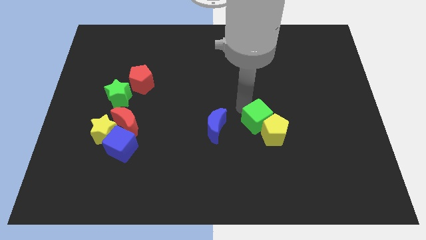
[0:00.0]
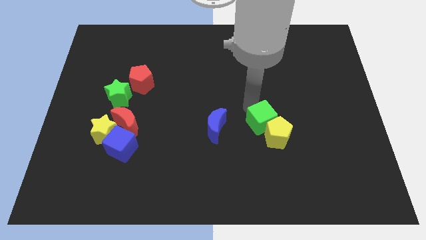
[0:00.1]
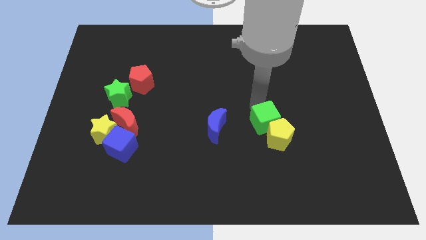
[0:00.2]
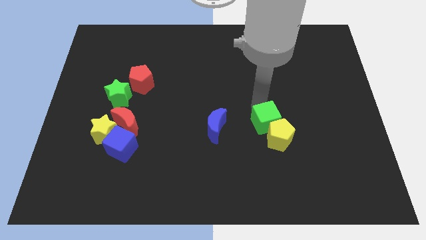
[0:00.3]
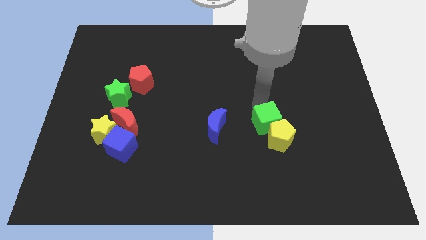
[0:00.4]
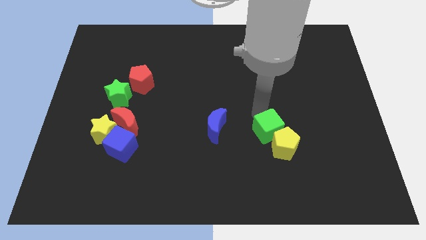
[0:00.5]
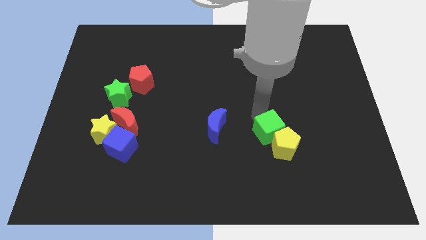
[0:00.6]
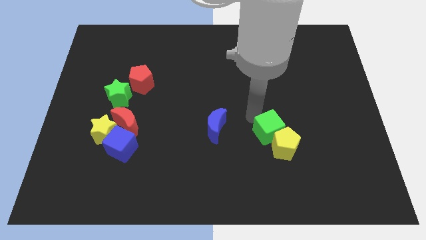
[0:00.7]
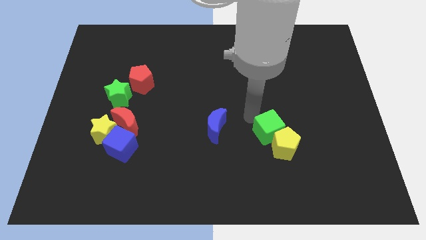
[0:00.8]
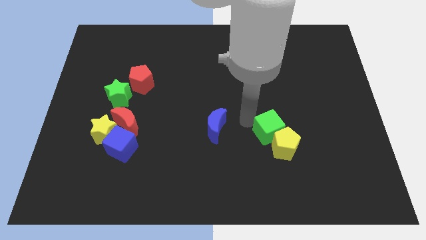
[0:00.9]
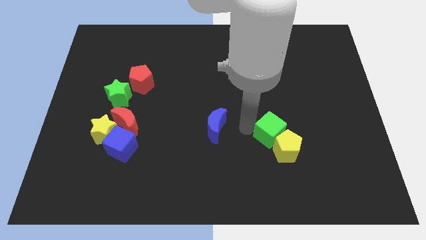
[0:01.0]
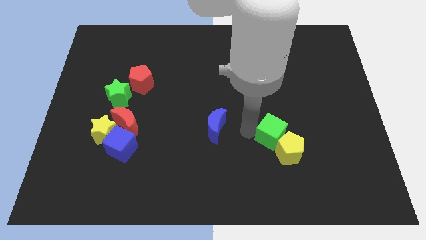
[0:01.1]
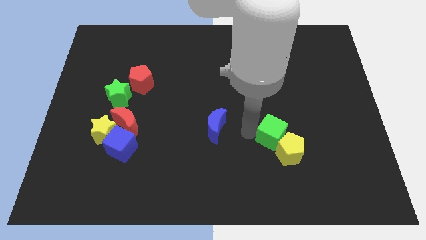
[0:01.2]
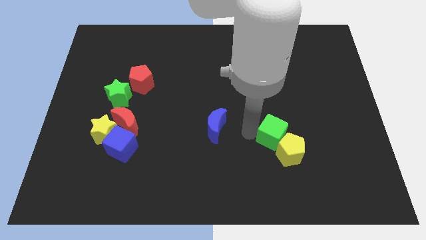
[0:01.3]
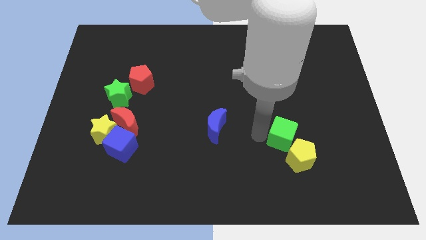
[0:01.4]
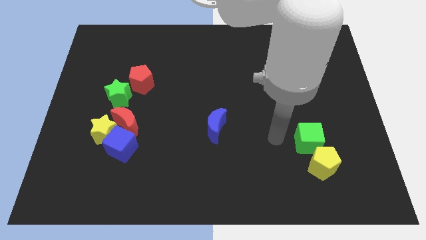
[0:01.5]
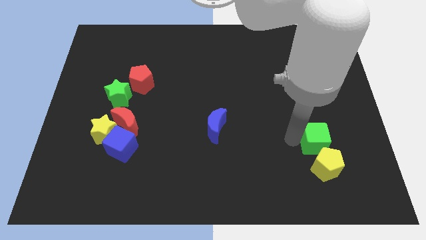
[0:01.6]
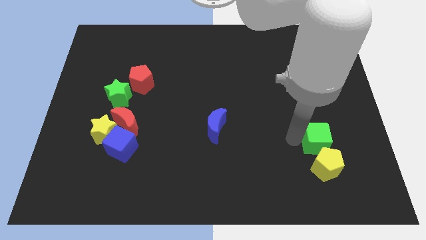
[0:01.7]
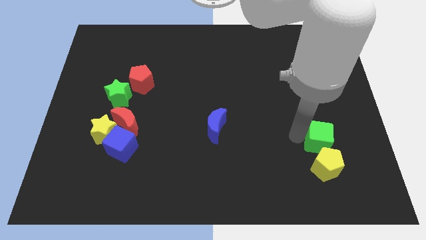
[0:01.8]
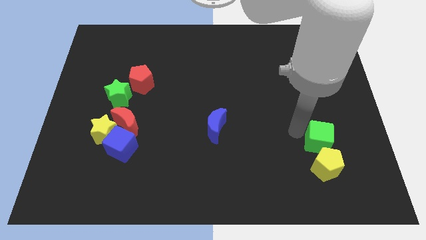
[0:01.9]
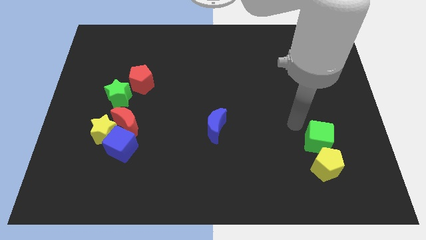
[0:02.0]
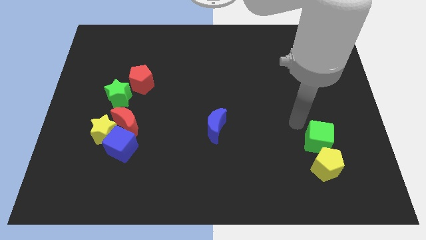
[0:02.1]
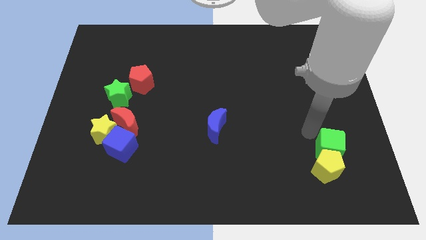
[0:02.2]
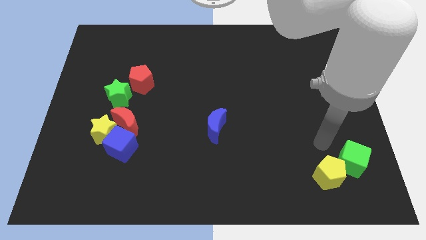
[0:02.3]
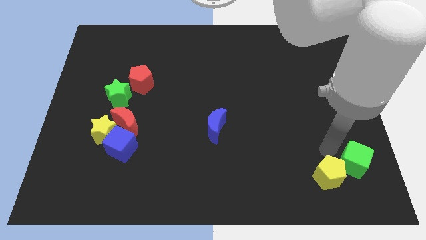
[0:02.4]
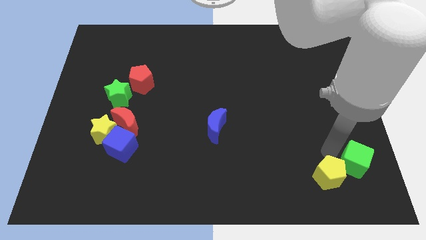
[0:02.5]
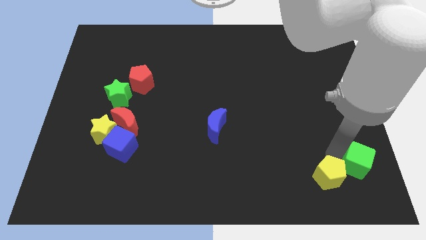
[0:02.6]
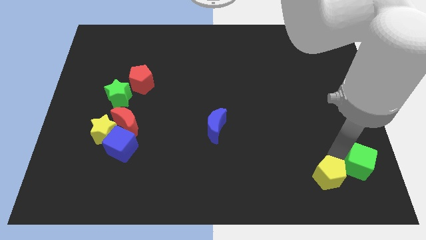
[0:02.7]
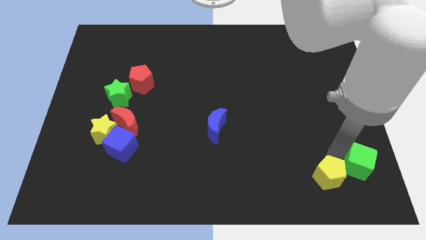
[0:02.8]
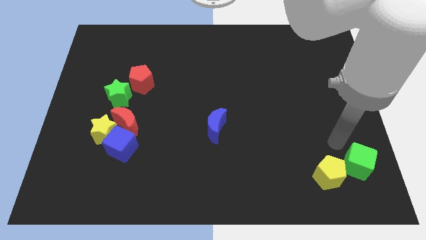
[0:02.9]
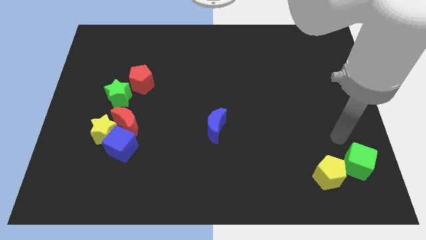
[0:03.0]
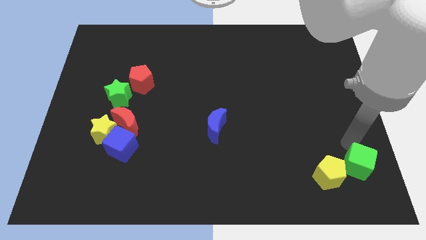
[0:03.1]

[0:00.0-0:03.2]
push the green cube to the right of the yellow pentagon

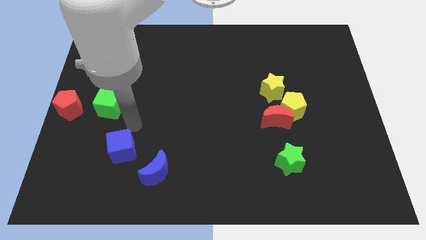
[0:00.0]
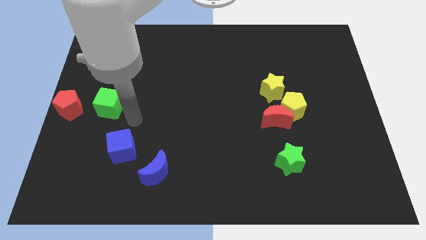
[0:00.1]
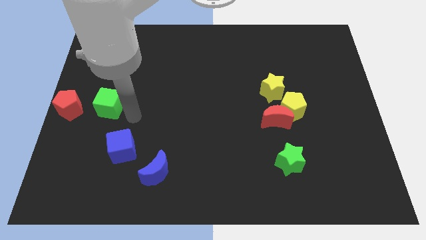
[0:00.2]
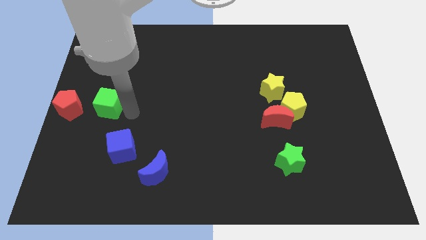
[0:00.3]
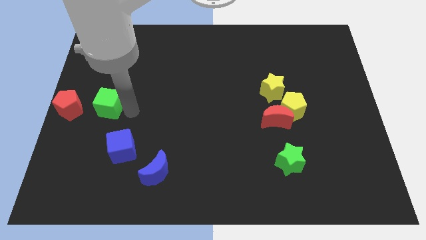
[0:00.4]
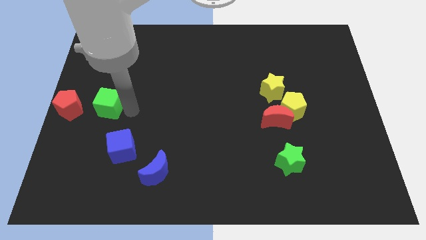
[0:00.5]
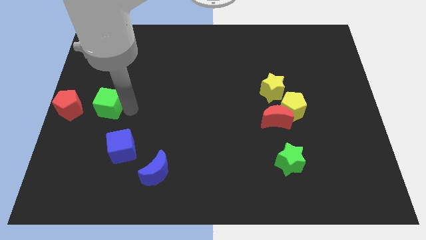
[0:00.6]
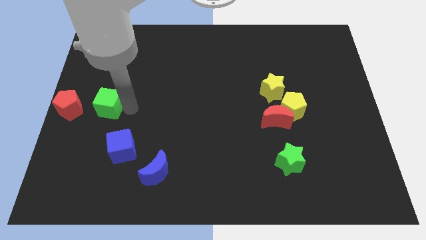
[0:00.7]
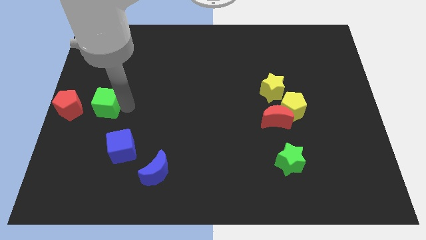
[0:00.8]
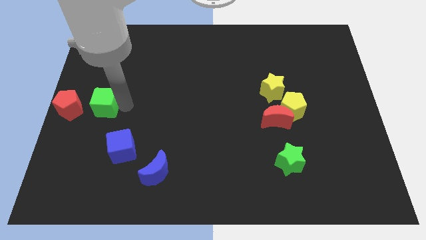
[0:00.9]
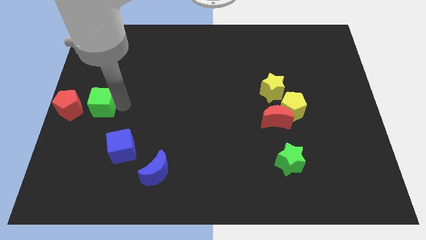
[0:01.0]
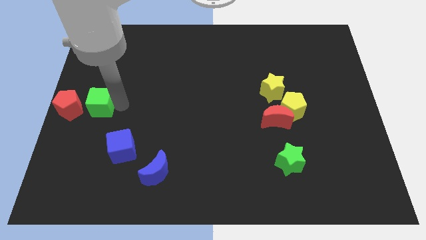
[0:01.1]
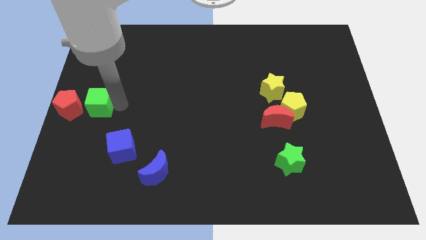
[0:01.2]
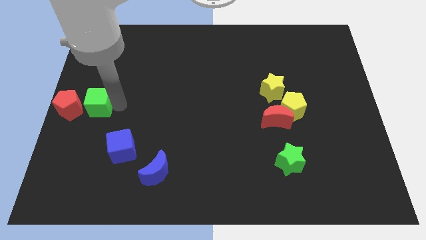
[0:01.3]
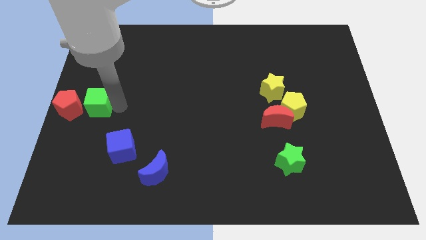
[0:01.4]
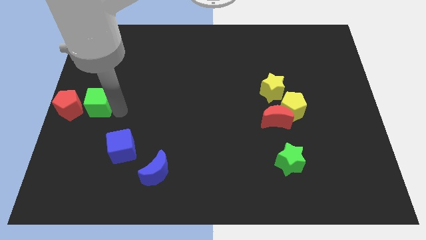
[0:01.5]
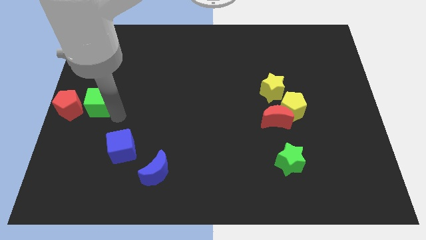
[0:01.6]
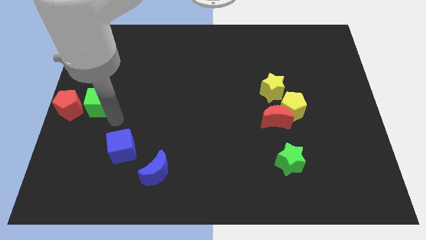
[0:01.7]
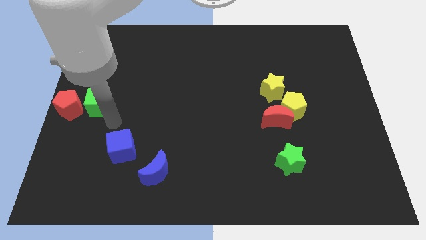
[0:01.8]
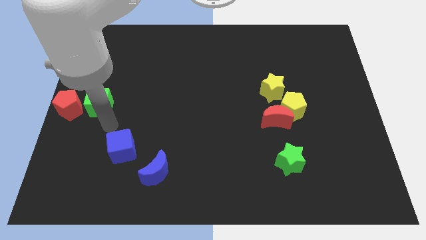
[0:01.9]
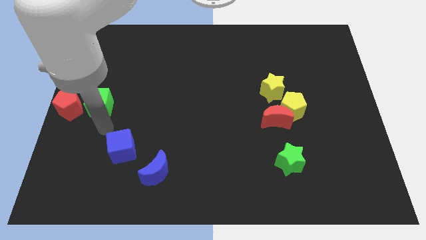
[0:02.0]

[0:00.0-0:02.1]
push green cube towards red pentagon

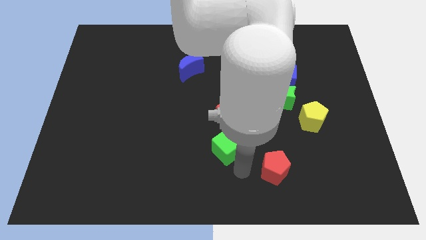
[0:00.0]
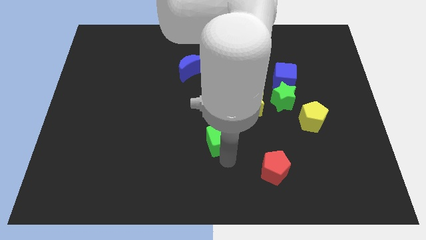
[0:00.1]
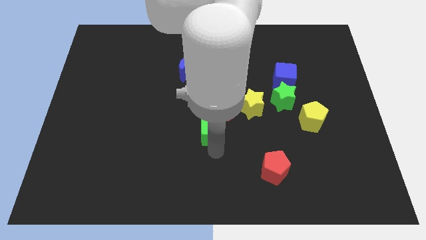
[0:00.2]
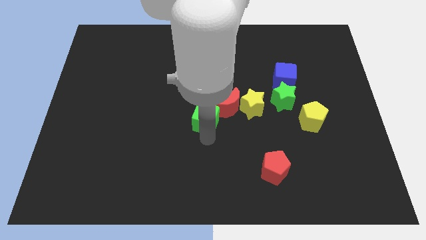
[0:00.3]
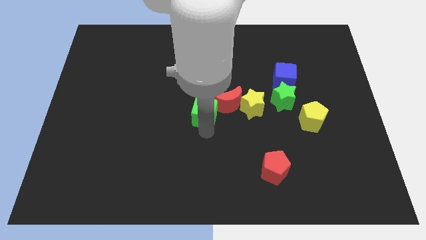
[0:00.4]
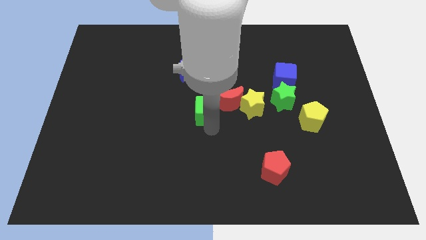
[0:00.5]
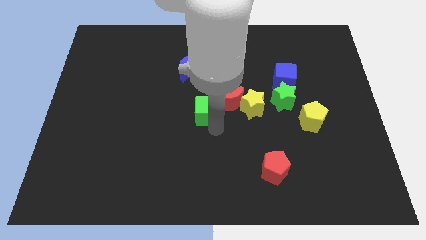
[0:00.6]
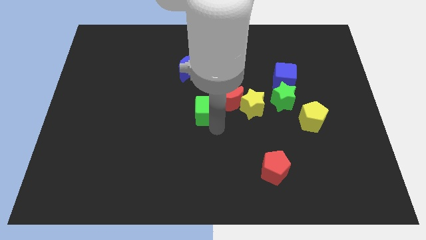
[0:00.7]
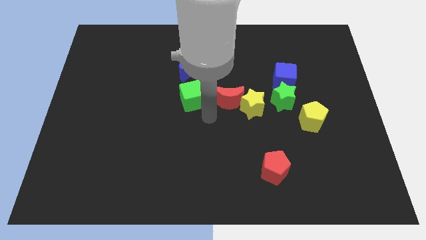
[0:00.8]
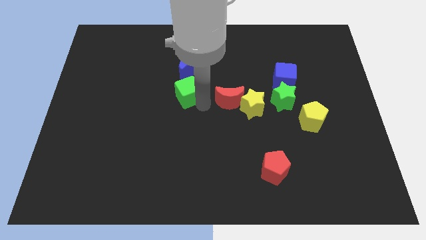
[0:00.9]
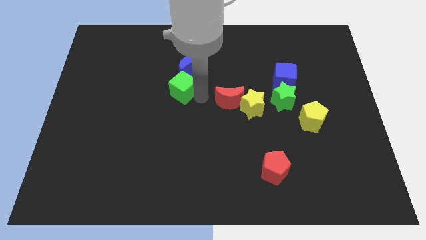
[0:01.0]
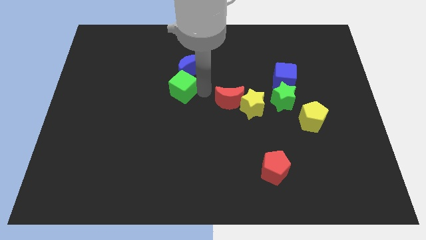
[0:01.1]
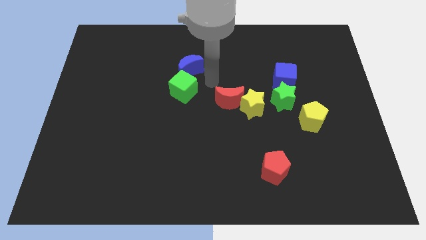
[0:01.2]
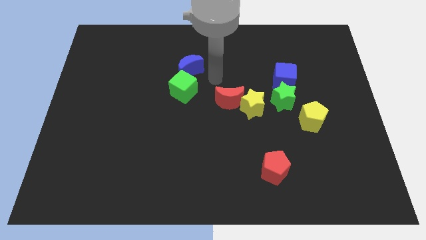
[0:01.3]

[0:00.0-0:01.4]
place green cube below the blue moon

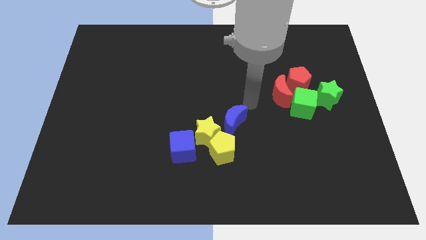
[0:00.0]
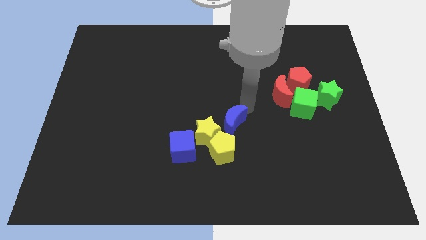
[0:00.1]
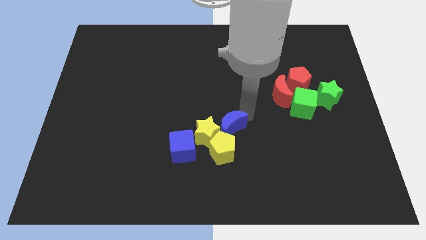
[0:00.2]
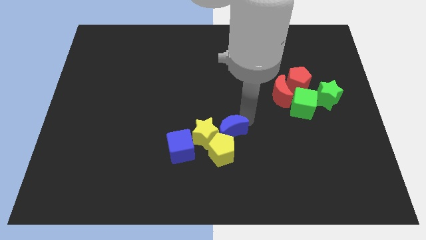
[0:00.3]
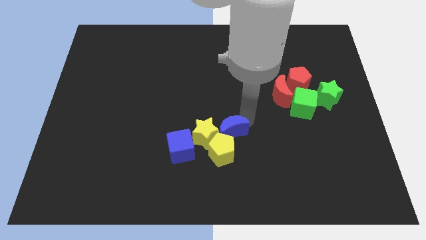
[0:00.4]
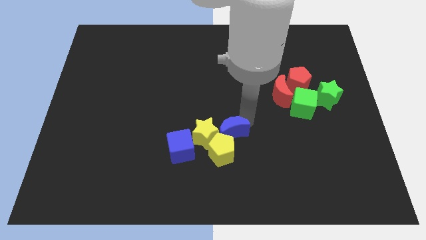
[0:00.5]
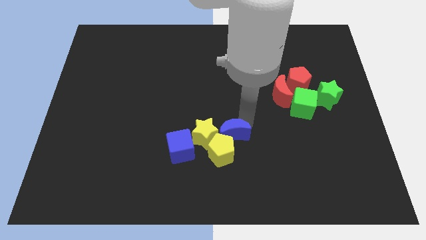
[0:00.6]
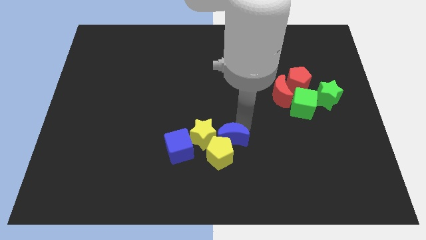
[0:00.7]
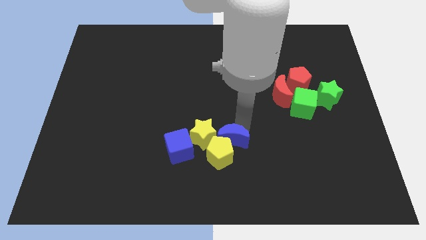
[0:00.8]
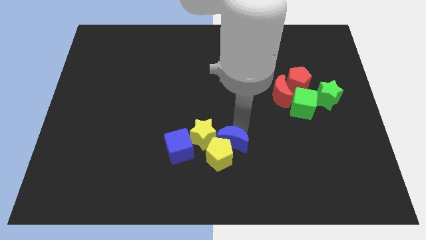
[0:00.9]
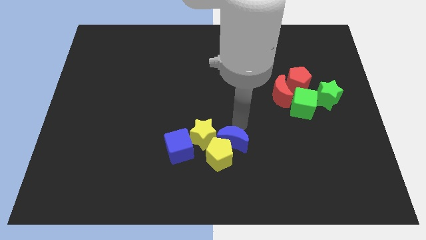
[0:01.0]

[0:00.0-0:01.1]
move the blue crescent right to the yellow pentagon

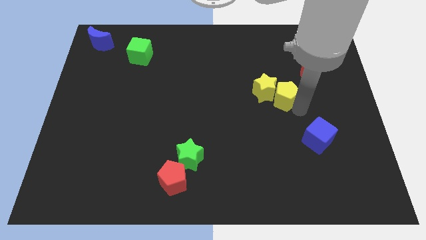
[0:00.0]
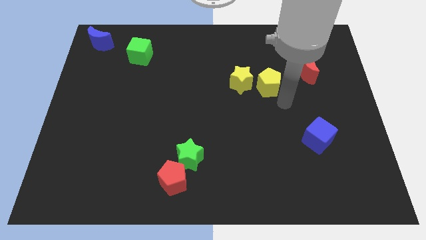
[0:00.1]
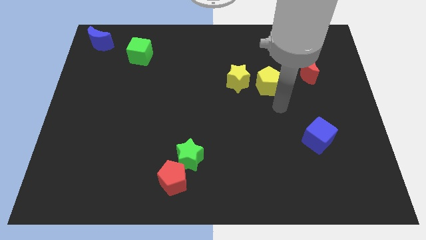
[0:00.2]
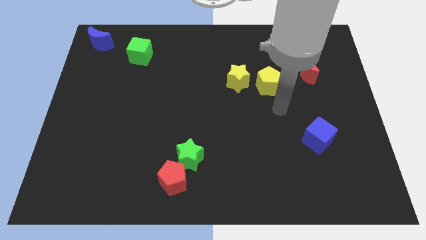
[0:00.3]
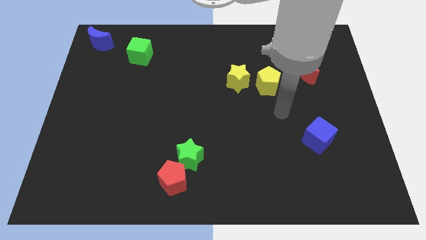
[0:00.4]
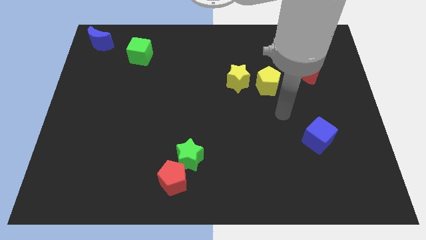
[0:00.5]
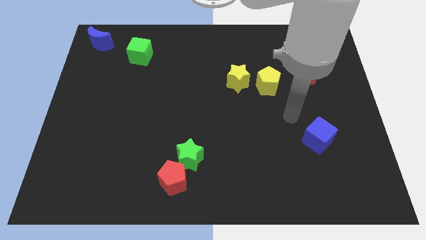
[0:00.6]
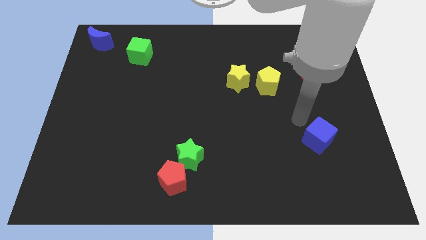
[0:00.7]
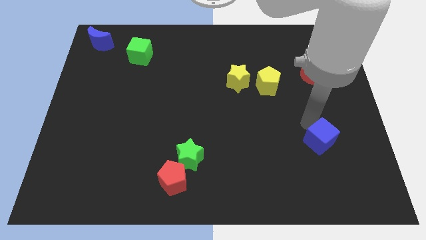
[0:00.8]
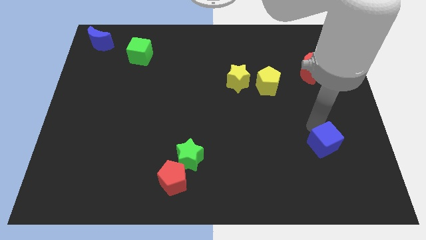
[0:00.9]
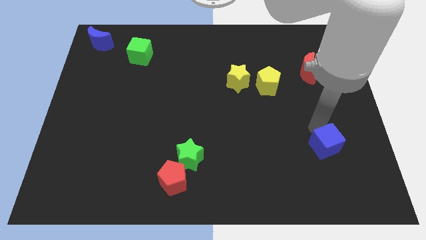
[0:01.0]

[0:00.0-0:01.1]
separate blue cube from yellow pentagon
